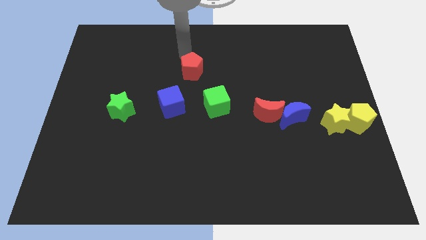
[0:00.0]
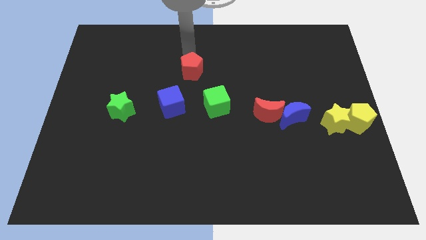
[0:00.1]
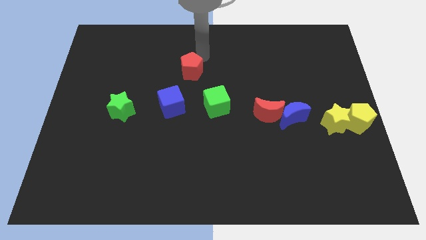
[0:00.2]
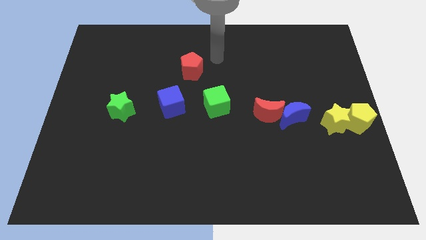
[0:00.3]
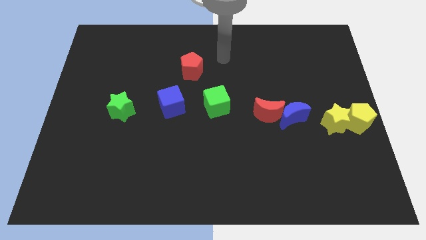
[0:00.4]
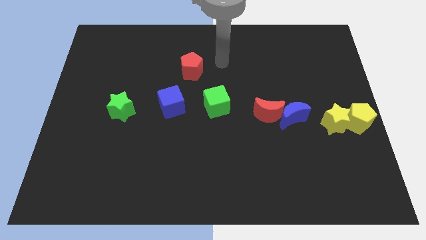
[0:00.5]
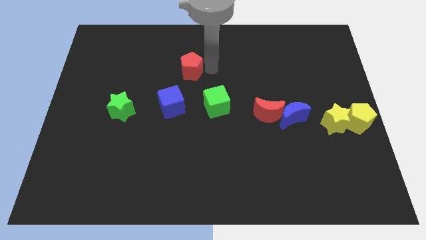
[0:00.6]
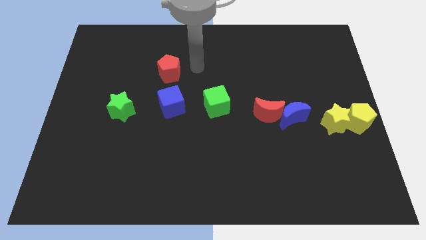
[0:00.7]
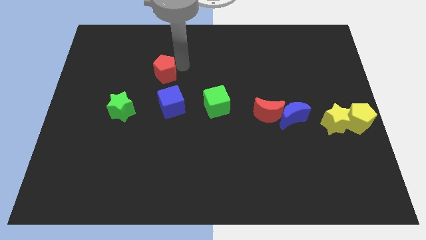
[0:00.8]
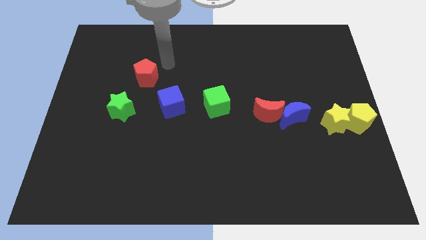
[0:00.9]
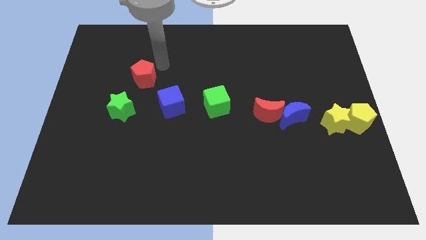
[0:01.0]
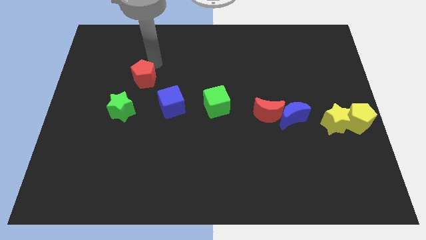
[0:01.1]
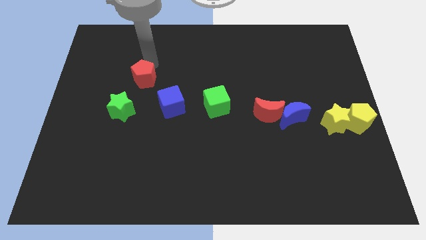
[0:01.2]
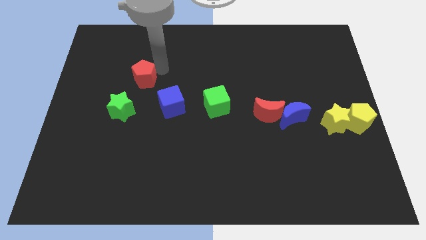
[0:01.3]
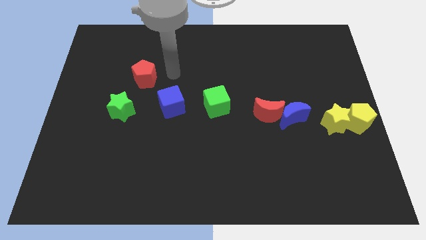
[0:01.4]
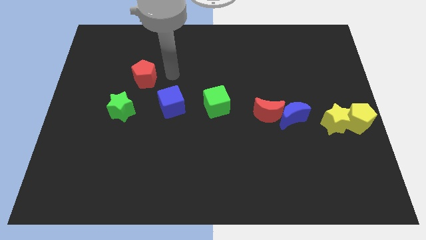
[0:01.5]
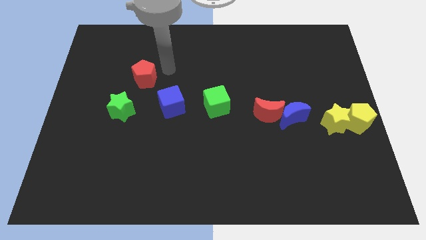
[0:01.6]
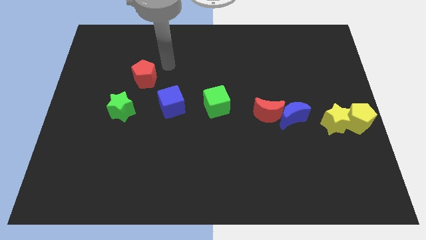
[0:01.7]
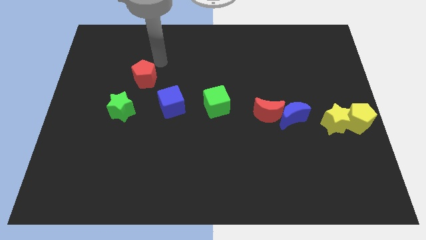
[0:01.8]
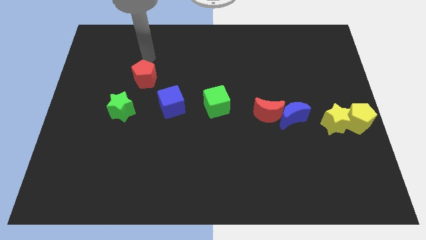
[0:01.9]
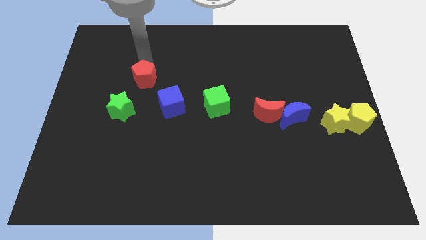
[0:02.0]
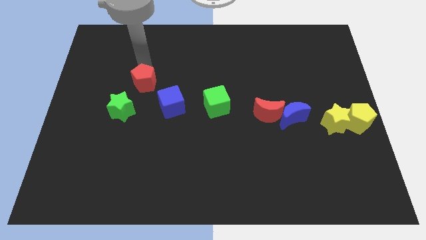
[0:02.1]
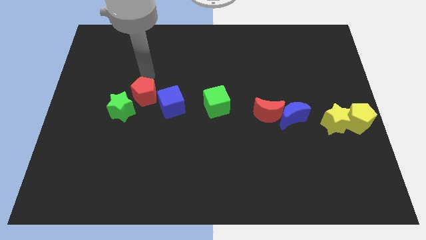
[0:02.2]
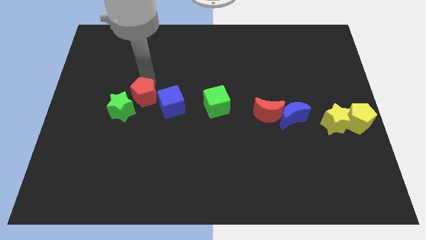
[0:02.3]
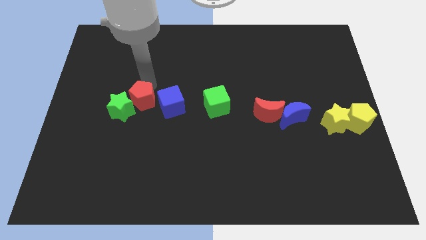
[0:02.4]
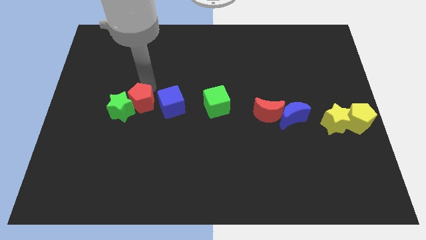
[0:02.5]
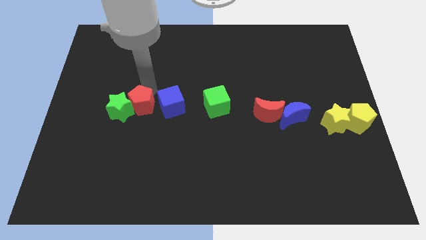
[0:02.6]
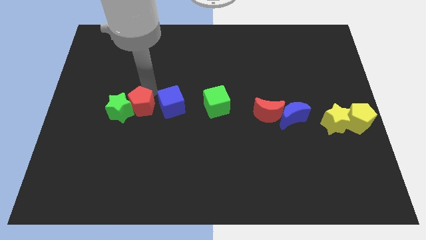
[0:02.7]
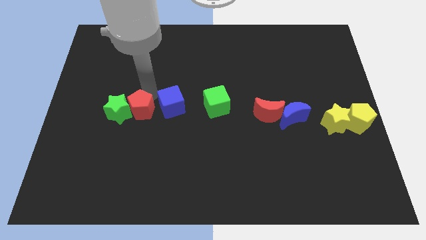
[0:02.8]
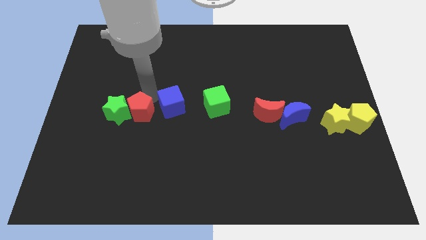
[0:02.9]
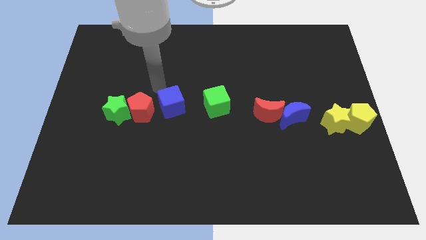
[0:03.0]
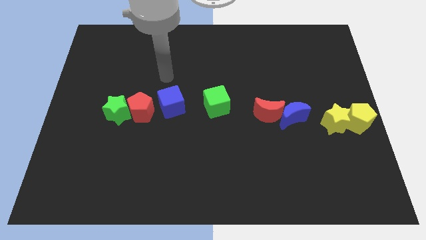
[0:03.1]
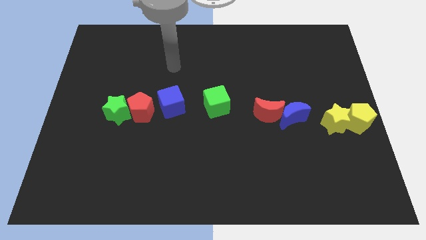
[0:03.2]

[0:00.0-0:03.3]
push the red pentagon between green star and blue cube

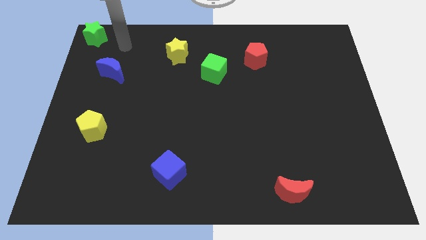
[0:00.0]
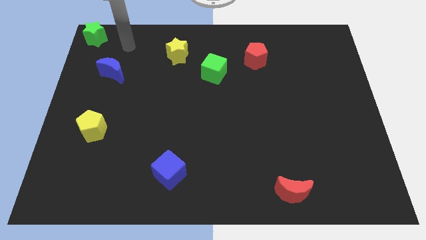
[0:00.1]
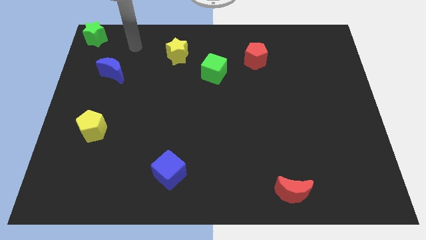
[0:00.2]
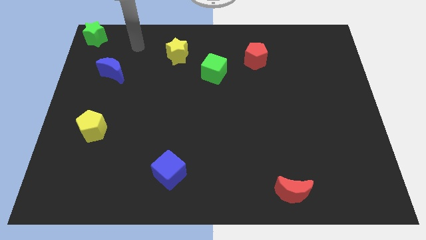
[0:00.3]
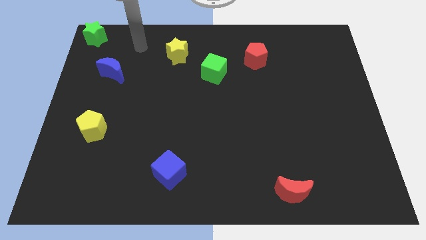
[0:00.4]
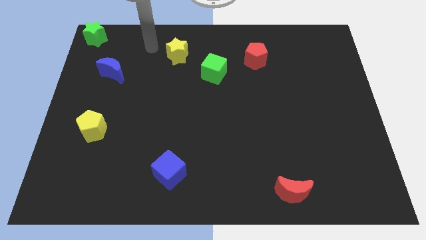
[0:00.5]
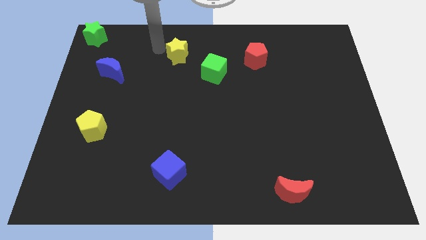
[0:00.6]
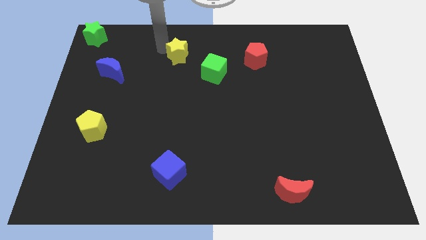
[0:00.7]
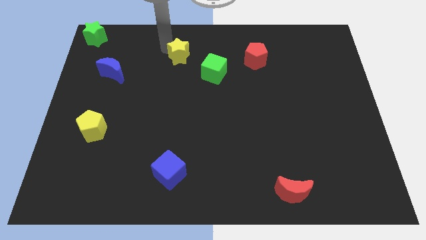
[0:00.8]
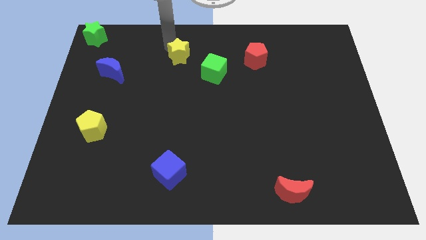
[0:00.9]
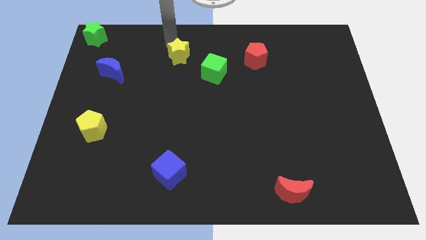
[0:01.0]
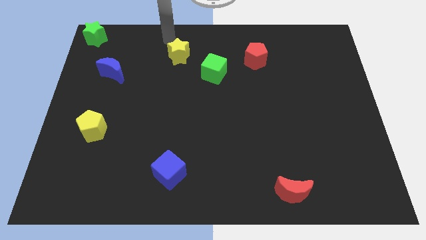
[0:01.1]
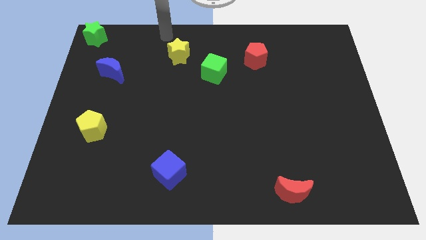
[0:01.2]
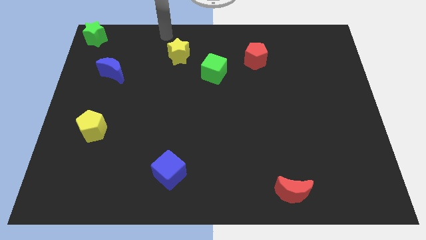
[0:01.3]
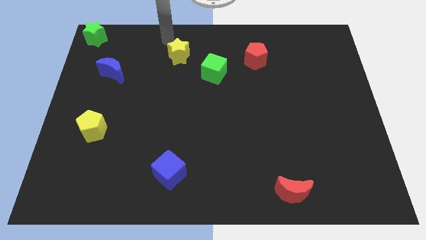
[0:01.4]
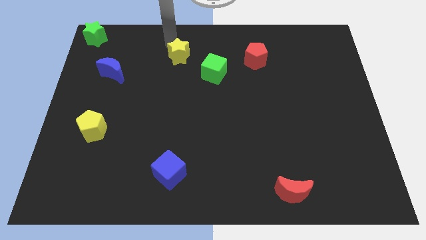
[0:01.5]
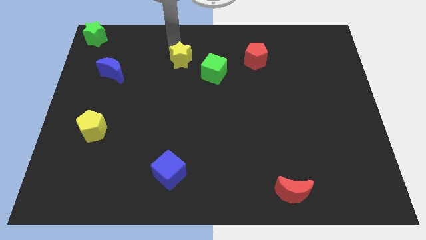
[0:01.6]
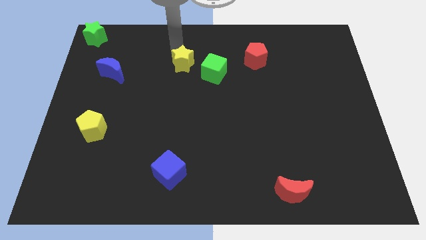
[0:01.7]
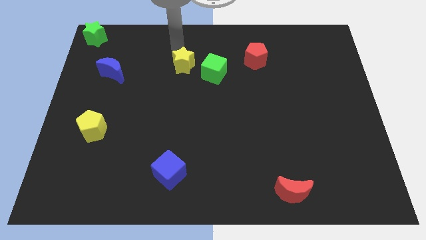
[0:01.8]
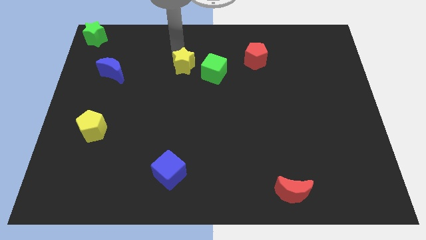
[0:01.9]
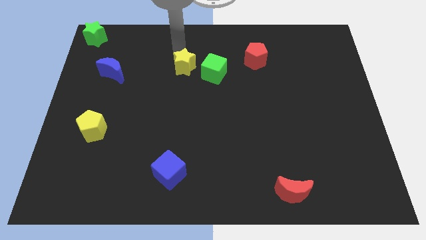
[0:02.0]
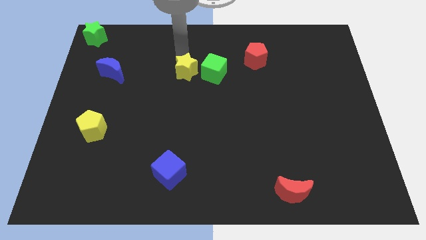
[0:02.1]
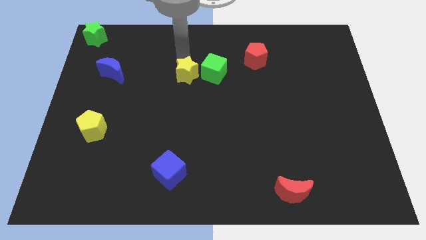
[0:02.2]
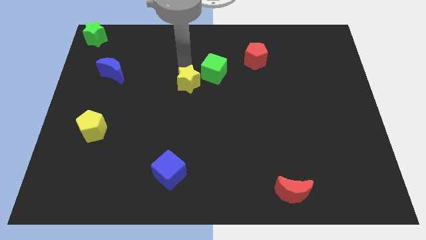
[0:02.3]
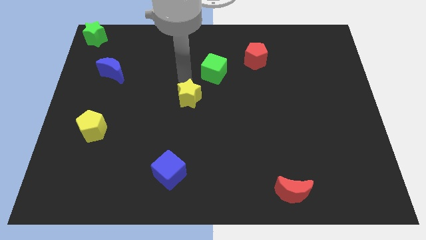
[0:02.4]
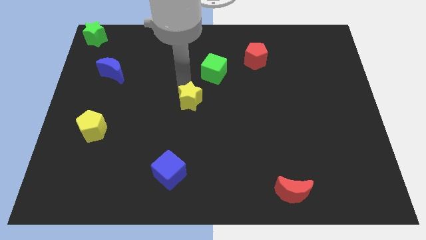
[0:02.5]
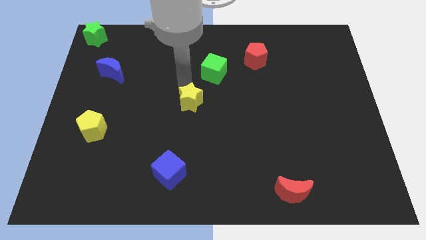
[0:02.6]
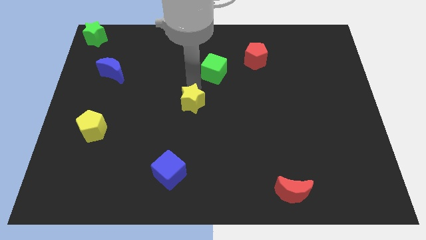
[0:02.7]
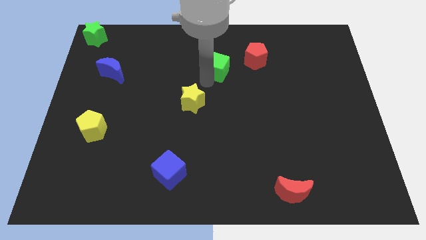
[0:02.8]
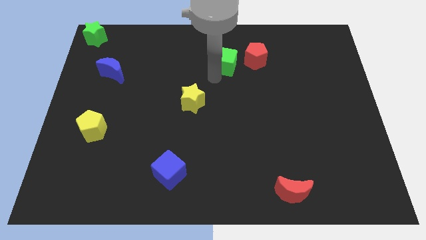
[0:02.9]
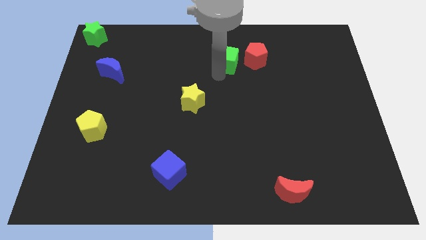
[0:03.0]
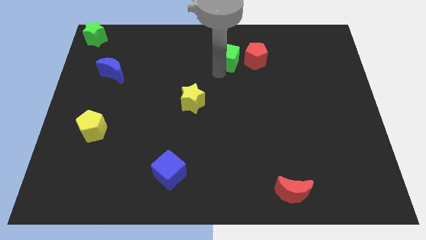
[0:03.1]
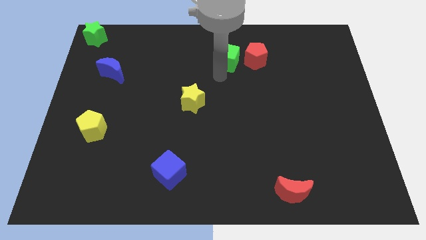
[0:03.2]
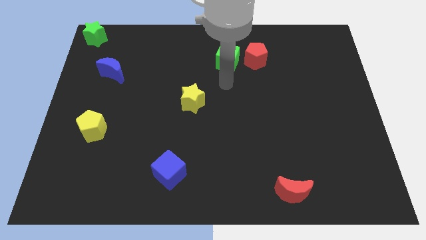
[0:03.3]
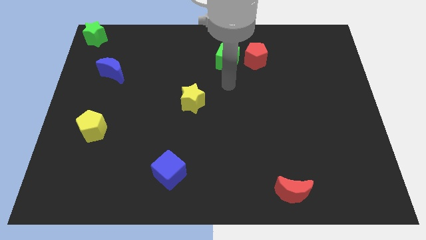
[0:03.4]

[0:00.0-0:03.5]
push the yellow star diagonally bottom left to the green cube

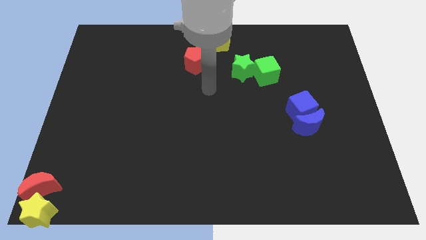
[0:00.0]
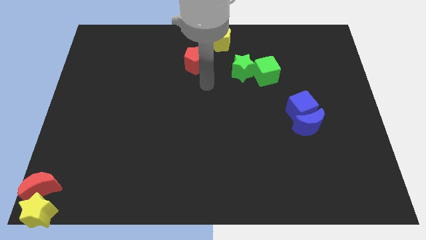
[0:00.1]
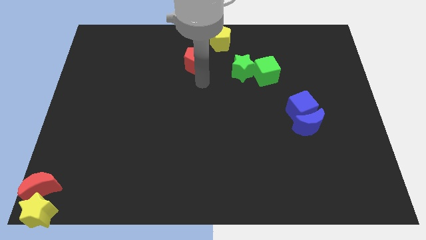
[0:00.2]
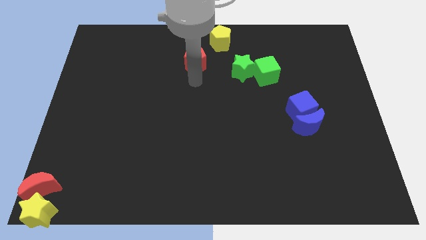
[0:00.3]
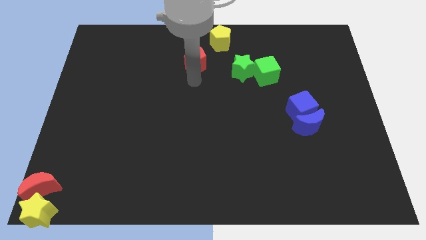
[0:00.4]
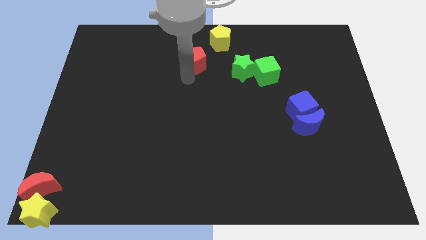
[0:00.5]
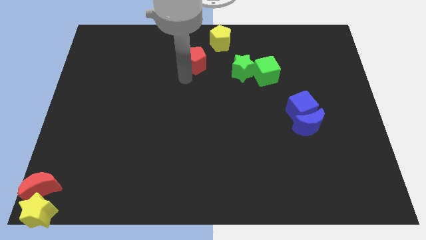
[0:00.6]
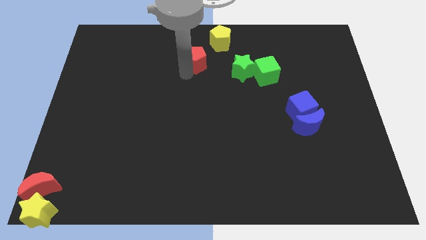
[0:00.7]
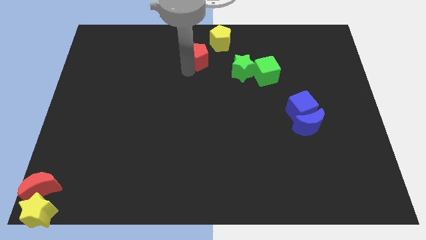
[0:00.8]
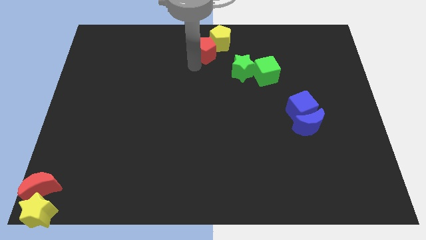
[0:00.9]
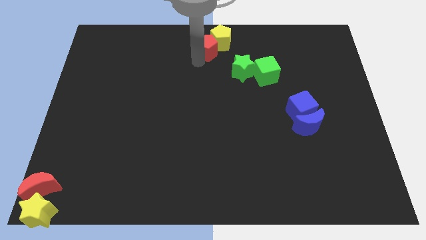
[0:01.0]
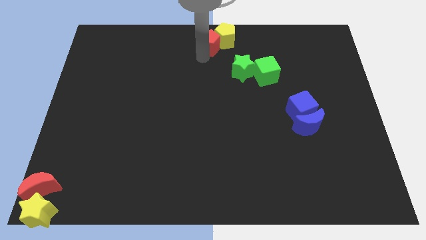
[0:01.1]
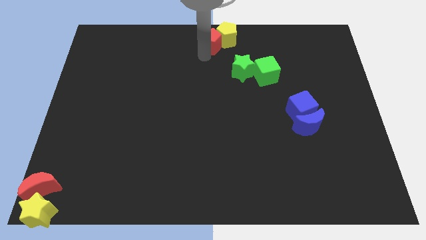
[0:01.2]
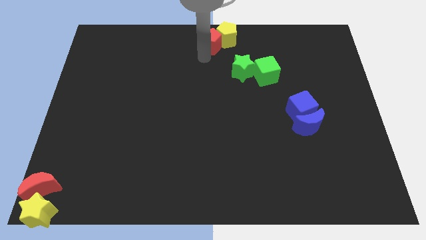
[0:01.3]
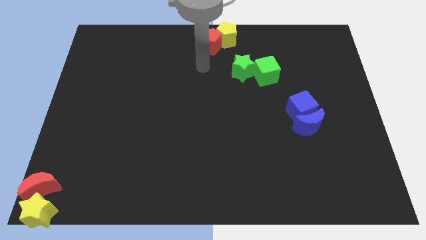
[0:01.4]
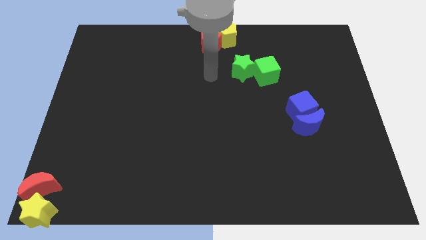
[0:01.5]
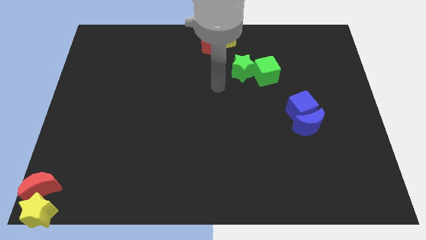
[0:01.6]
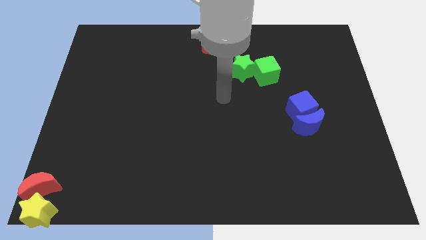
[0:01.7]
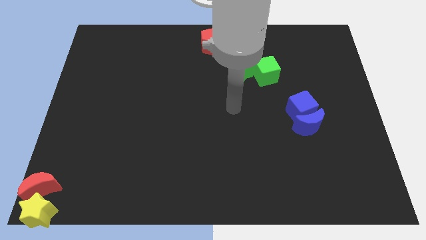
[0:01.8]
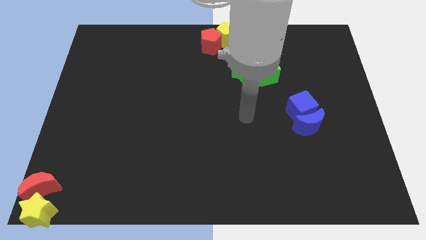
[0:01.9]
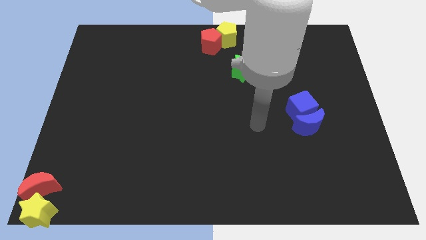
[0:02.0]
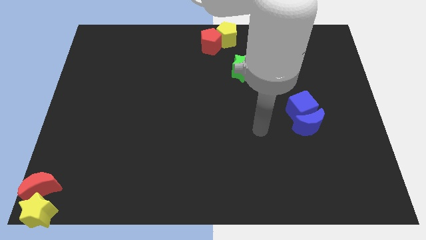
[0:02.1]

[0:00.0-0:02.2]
slide the red pentagon at the top center
